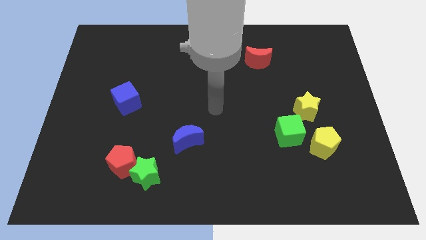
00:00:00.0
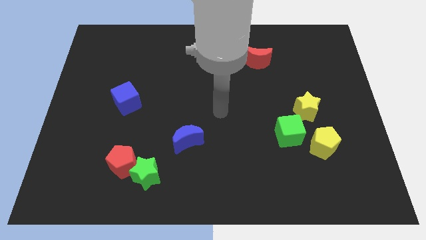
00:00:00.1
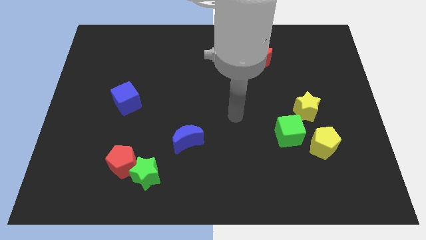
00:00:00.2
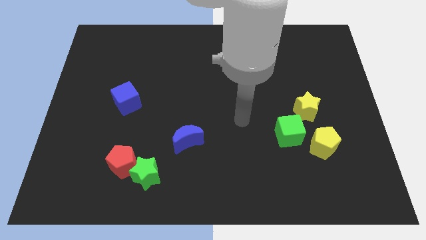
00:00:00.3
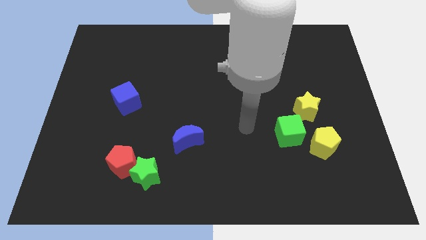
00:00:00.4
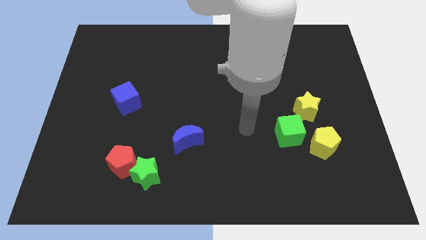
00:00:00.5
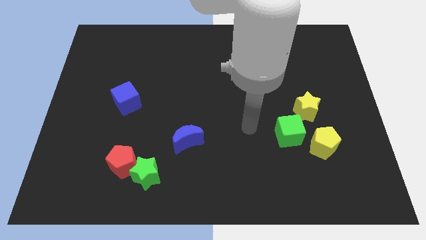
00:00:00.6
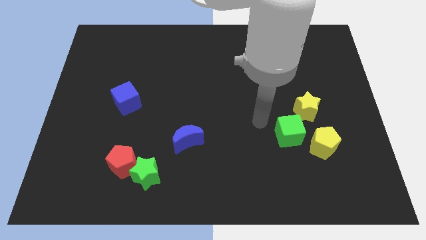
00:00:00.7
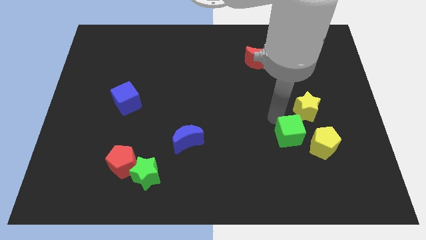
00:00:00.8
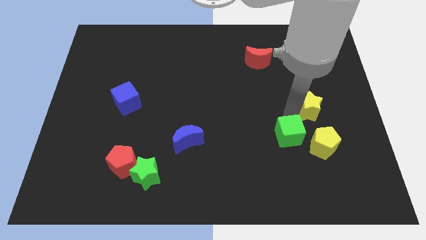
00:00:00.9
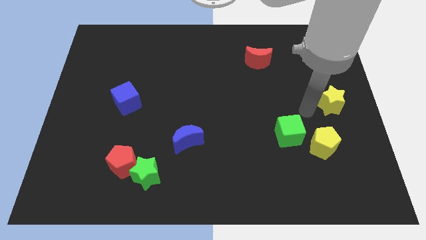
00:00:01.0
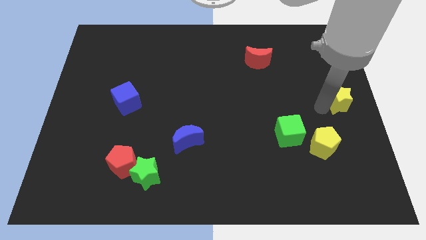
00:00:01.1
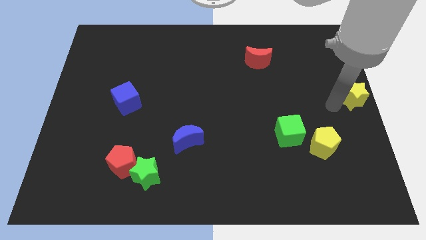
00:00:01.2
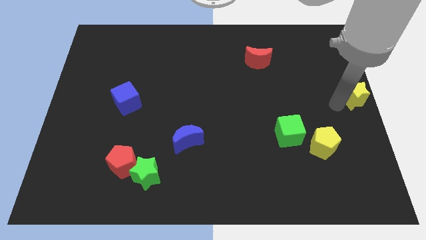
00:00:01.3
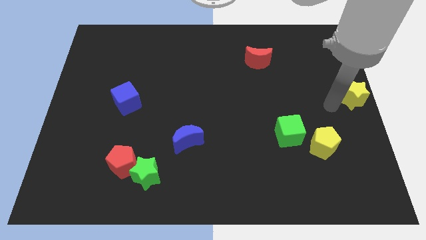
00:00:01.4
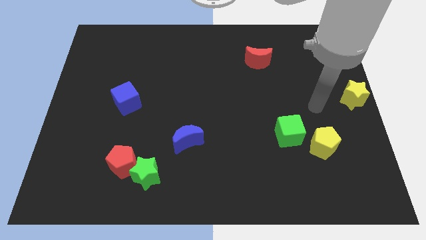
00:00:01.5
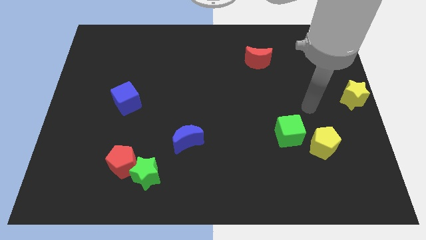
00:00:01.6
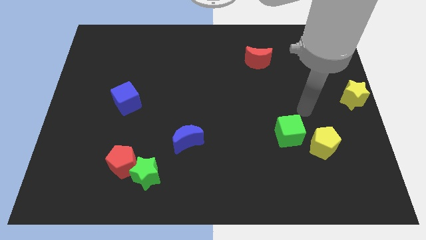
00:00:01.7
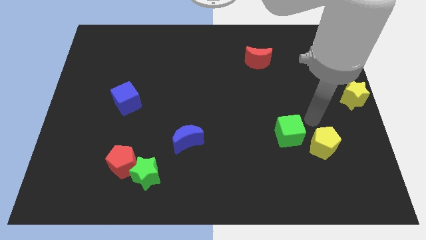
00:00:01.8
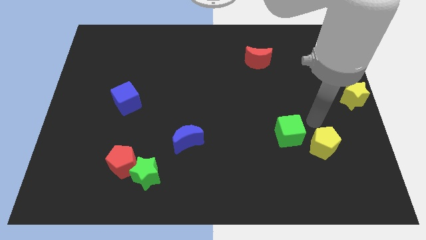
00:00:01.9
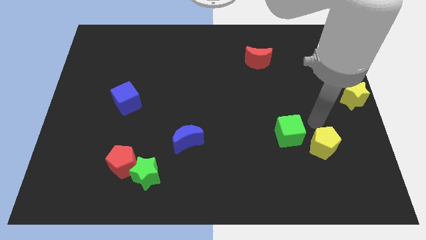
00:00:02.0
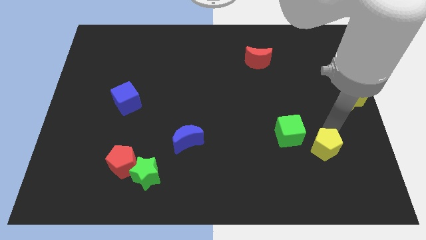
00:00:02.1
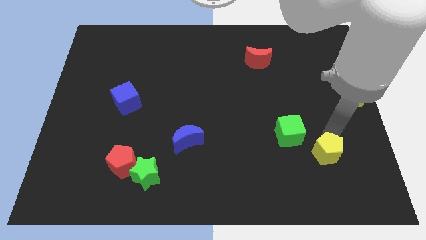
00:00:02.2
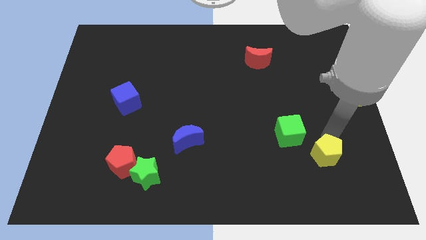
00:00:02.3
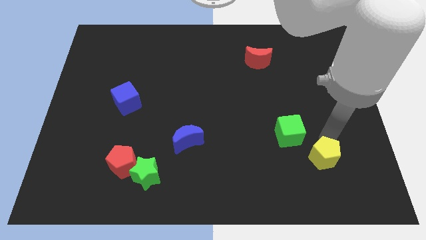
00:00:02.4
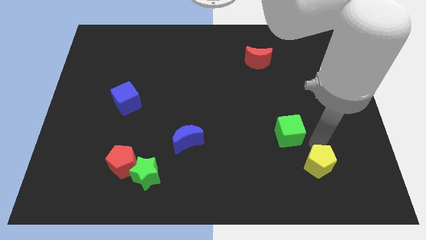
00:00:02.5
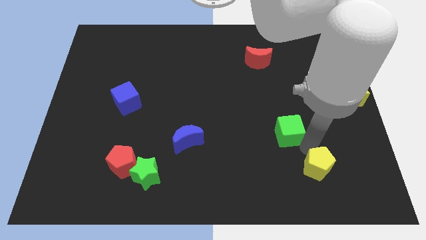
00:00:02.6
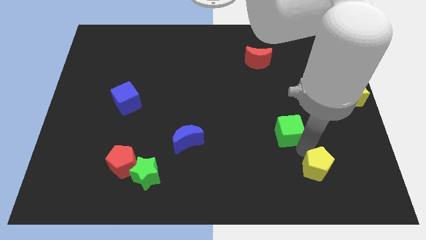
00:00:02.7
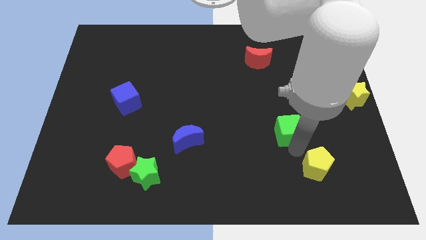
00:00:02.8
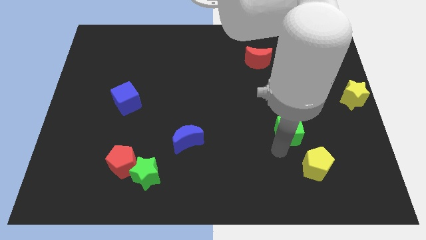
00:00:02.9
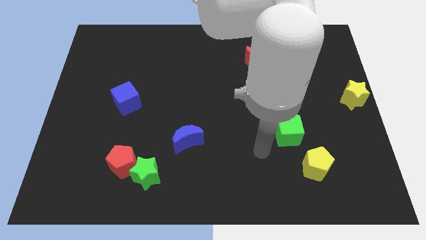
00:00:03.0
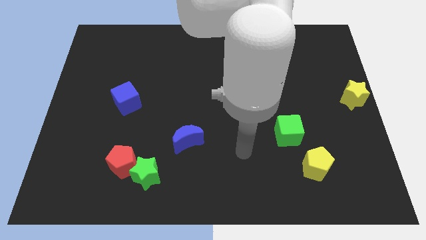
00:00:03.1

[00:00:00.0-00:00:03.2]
push yellow star towards middle right of the board

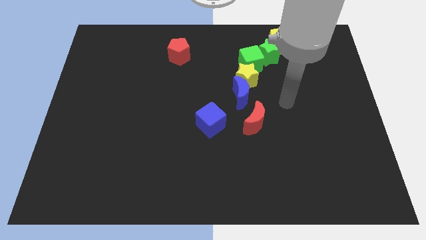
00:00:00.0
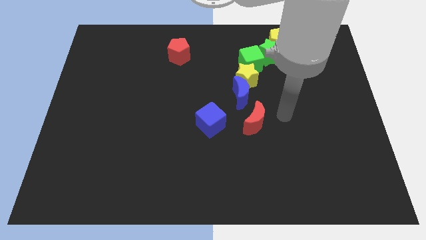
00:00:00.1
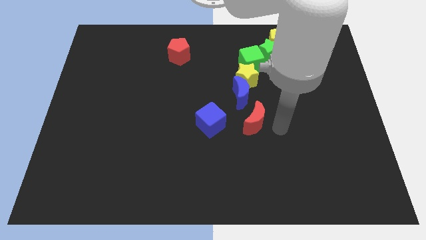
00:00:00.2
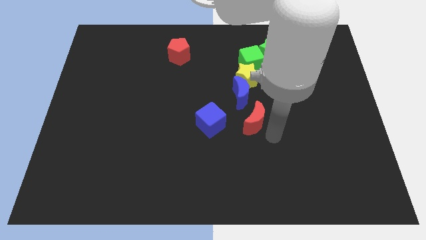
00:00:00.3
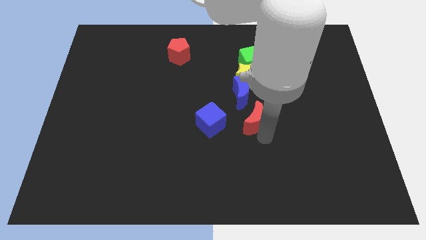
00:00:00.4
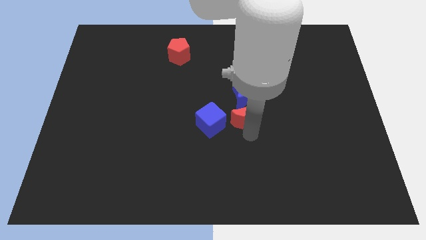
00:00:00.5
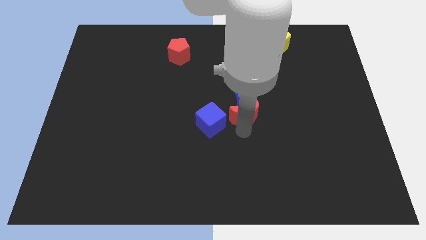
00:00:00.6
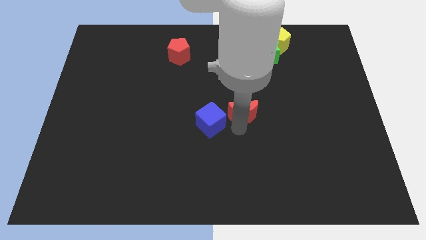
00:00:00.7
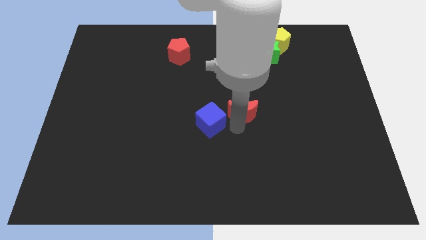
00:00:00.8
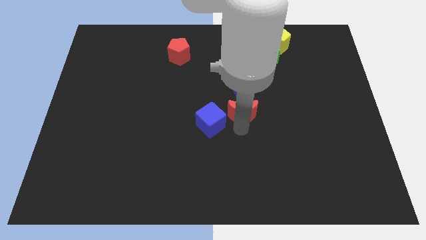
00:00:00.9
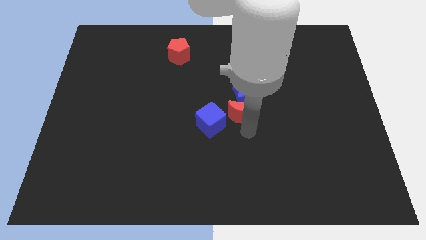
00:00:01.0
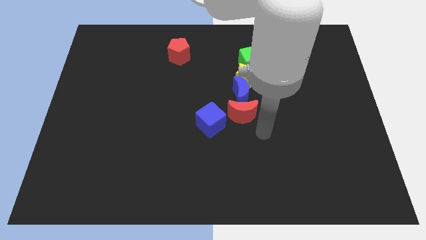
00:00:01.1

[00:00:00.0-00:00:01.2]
place red moon below blue moon

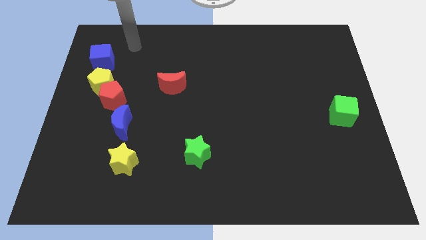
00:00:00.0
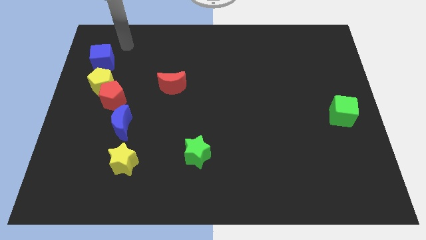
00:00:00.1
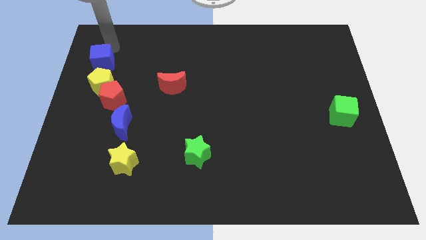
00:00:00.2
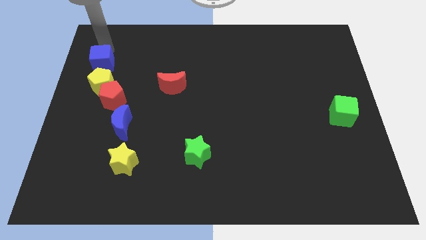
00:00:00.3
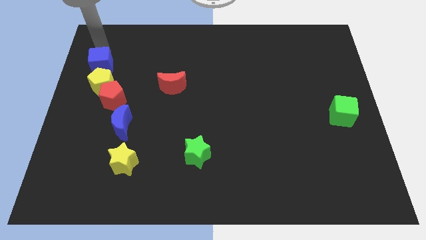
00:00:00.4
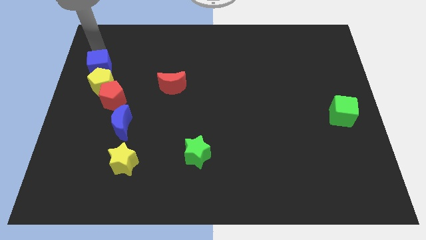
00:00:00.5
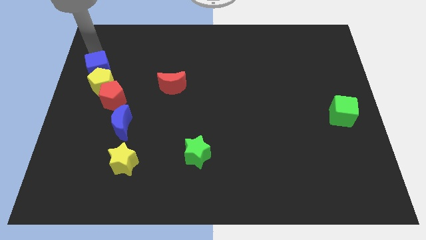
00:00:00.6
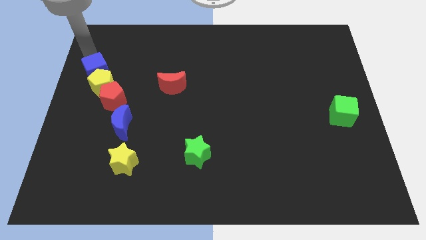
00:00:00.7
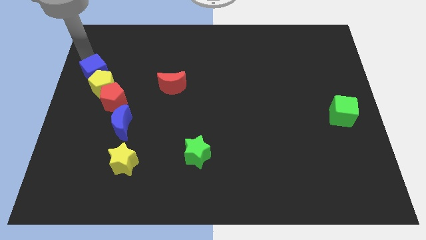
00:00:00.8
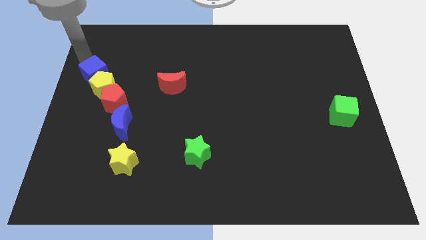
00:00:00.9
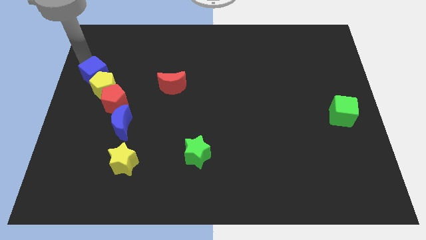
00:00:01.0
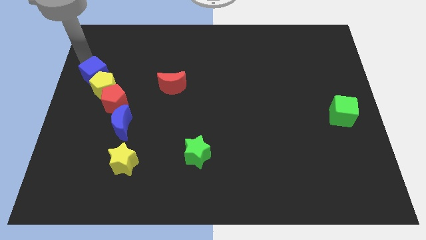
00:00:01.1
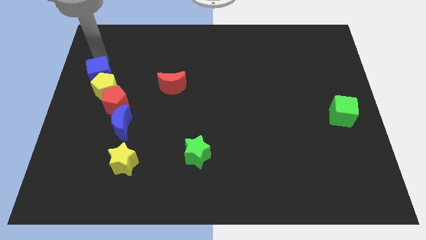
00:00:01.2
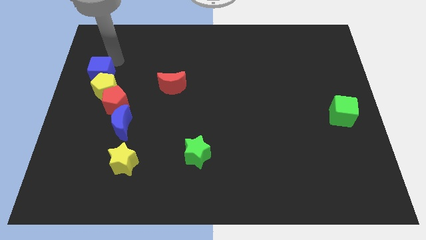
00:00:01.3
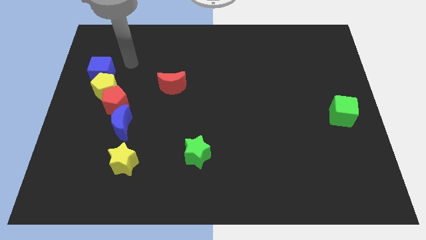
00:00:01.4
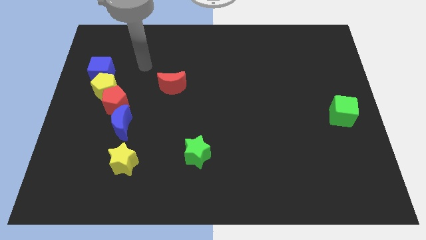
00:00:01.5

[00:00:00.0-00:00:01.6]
push the blue cube above into the yellow pentagon

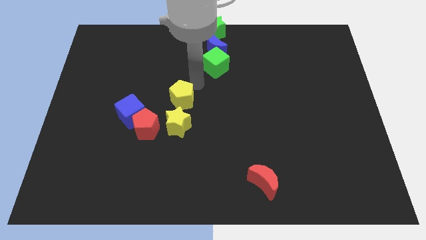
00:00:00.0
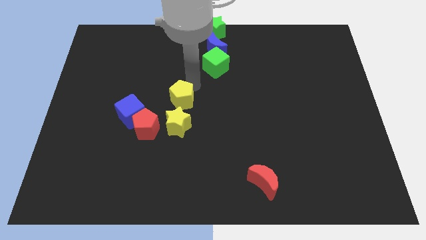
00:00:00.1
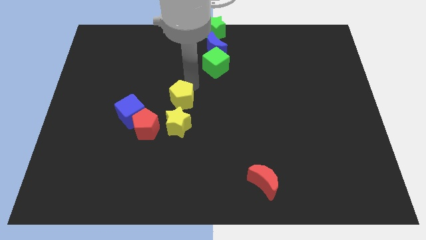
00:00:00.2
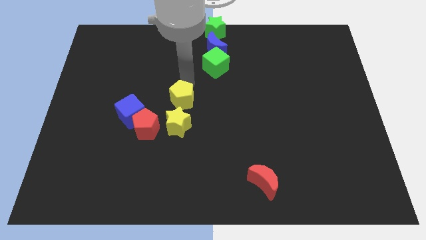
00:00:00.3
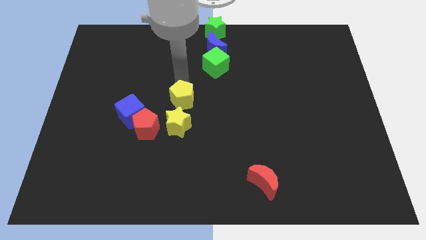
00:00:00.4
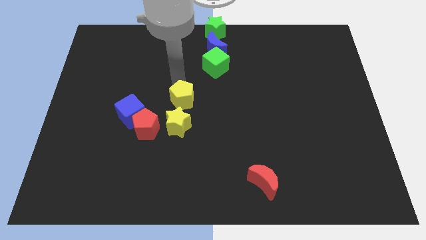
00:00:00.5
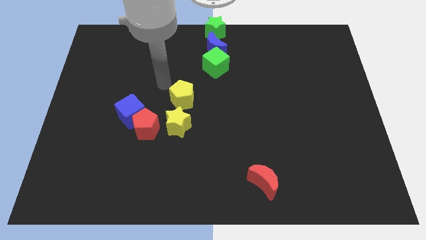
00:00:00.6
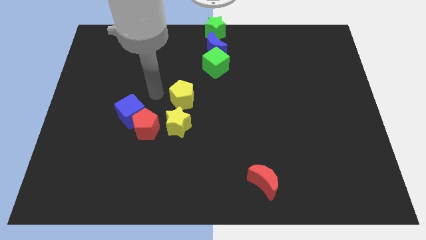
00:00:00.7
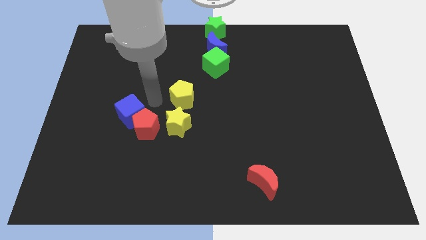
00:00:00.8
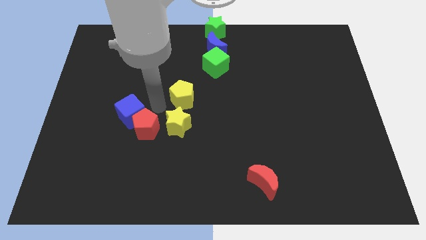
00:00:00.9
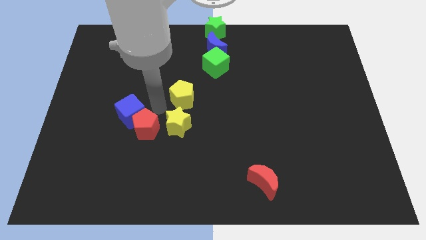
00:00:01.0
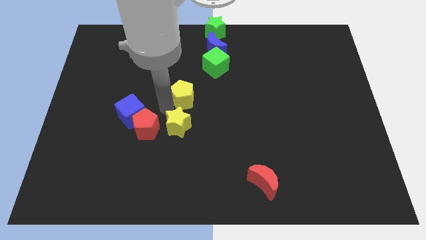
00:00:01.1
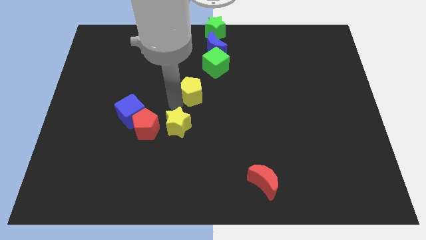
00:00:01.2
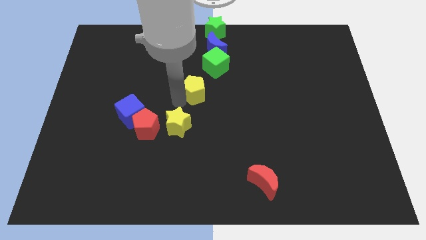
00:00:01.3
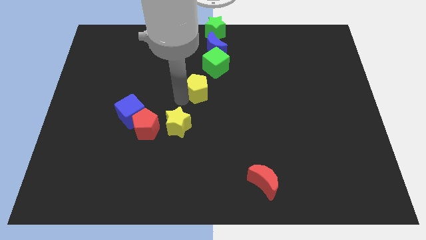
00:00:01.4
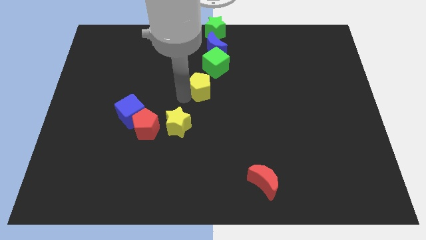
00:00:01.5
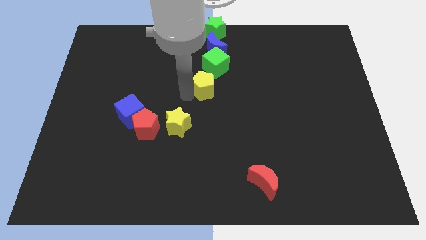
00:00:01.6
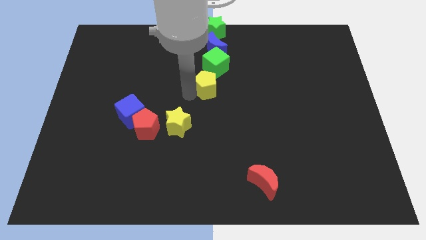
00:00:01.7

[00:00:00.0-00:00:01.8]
place the yellow pentagon diagonally top right to the yellow star

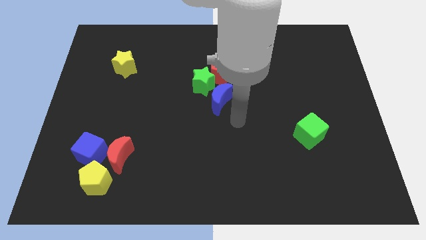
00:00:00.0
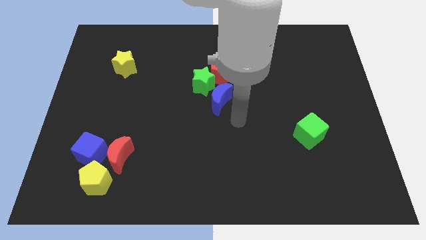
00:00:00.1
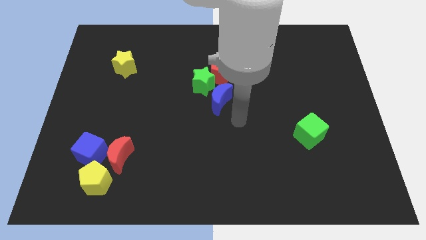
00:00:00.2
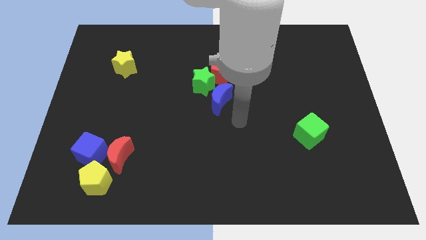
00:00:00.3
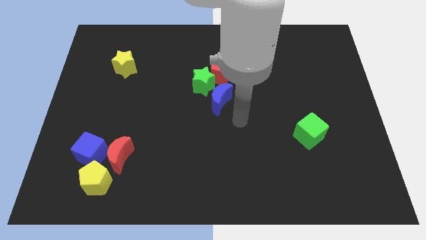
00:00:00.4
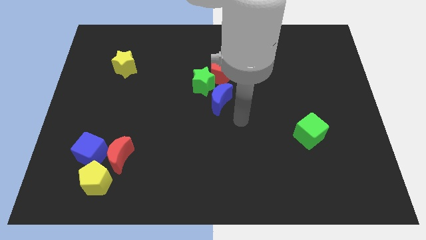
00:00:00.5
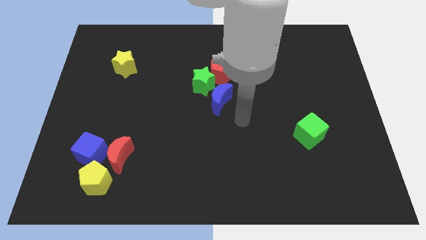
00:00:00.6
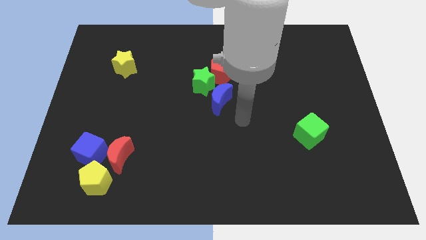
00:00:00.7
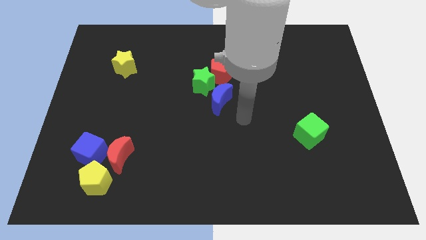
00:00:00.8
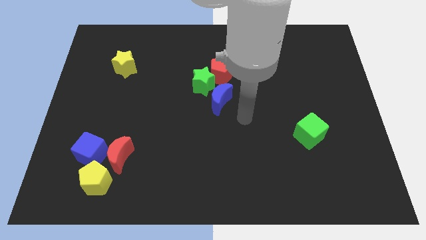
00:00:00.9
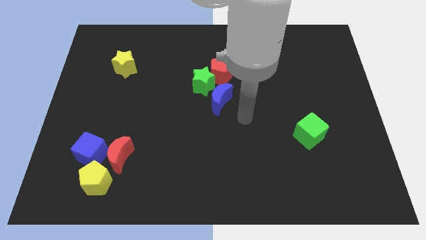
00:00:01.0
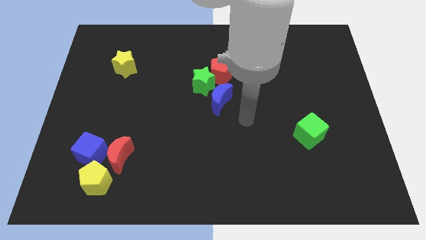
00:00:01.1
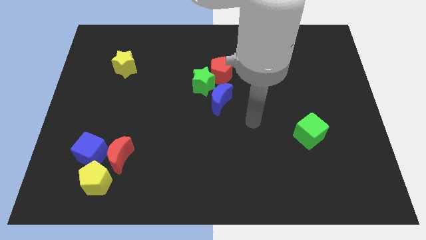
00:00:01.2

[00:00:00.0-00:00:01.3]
move your arm in between blue moon and green cube
